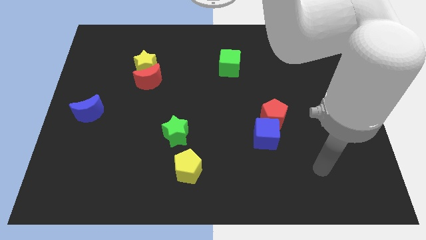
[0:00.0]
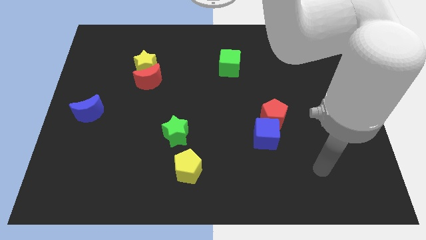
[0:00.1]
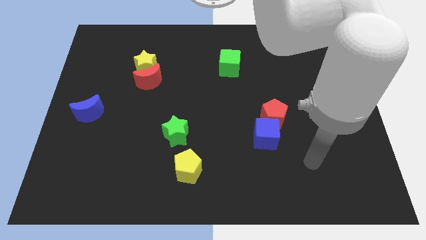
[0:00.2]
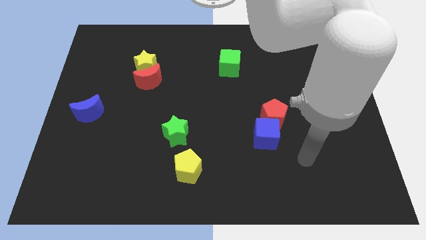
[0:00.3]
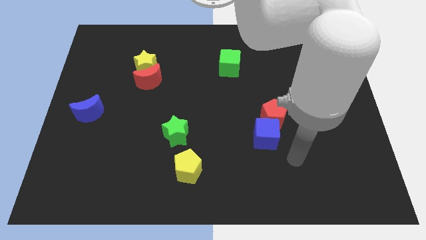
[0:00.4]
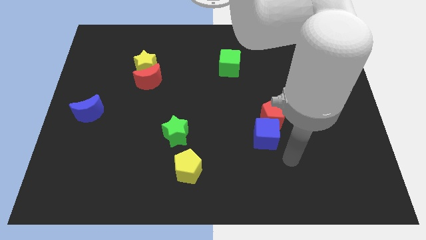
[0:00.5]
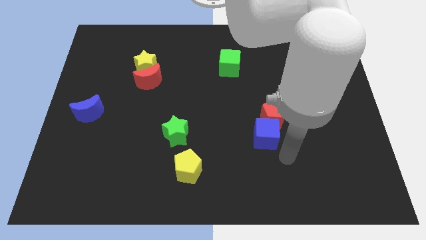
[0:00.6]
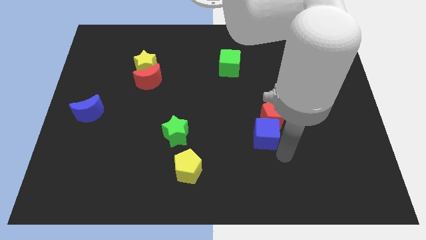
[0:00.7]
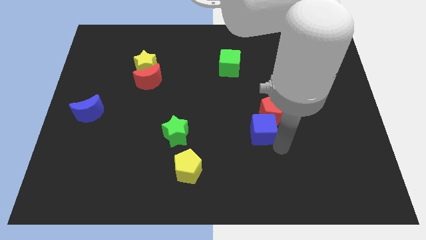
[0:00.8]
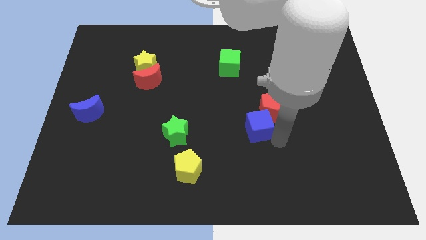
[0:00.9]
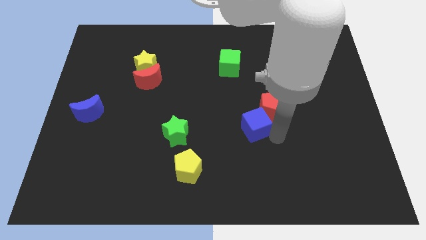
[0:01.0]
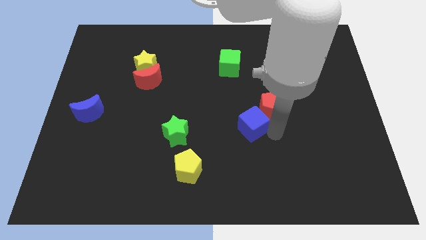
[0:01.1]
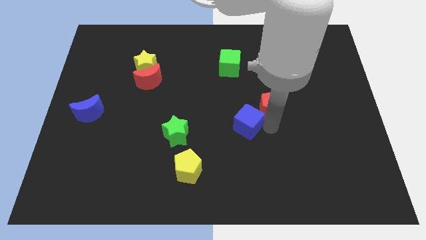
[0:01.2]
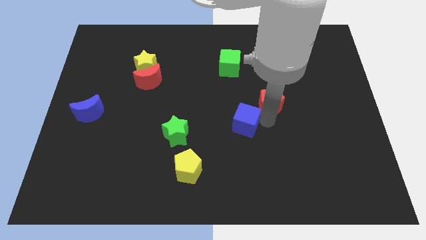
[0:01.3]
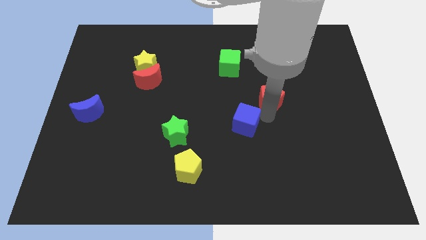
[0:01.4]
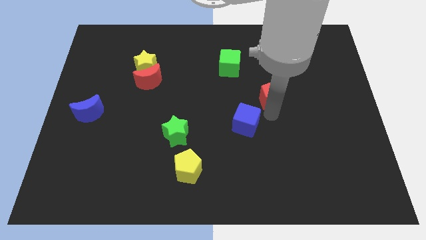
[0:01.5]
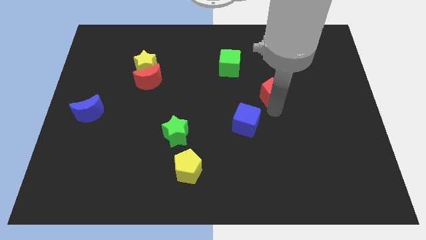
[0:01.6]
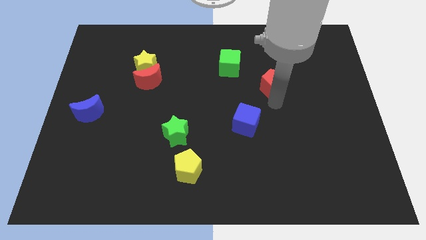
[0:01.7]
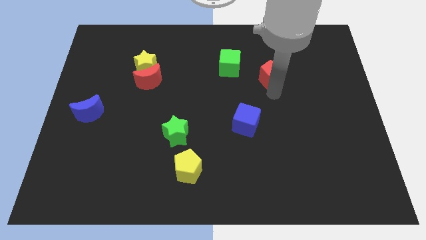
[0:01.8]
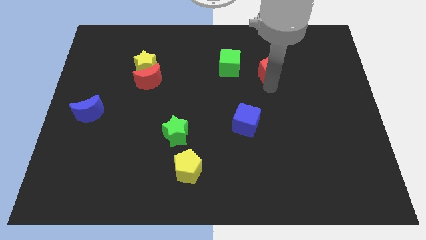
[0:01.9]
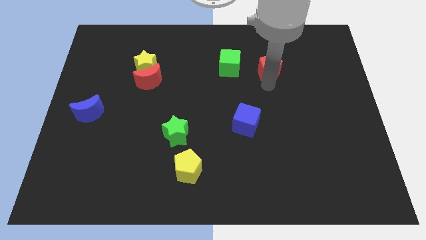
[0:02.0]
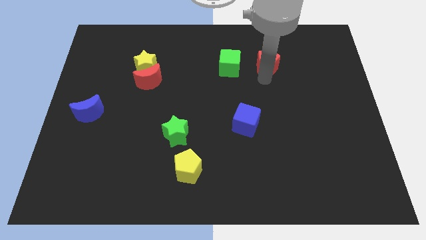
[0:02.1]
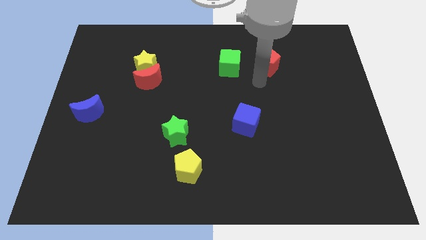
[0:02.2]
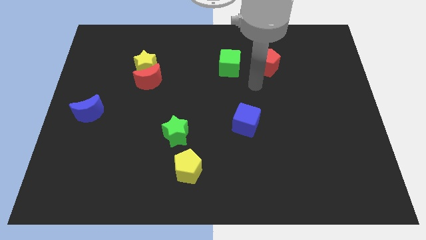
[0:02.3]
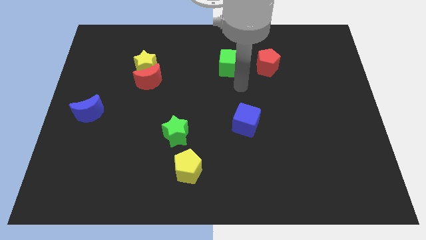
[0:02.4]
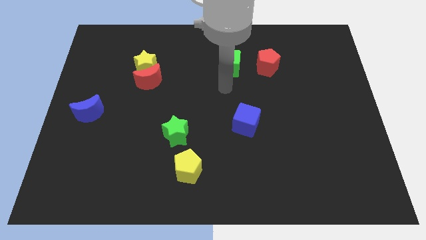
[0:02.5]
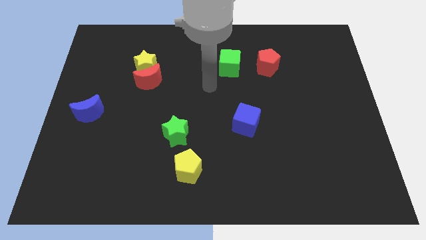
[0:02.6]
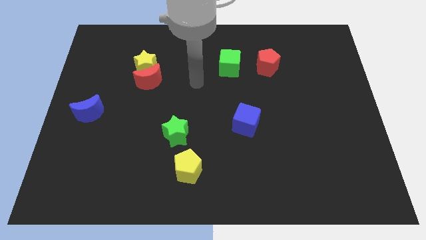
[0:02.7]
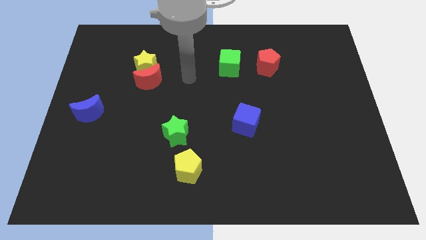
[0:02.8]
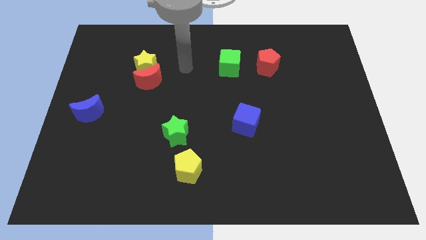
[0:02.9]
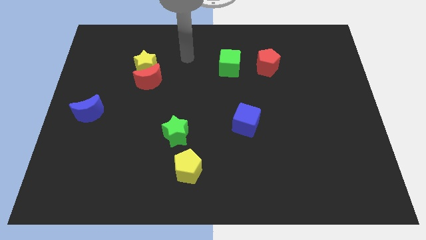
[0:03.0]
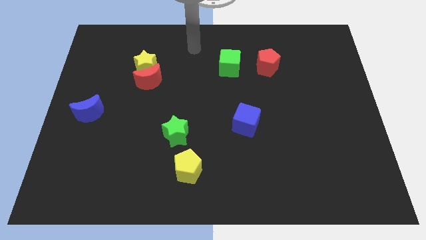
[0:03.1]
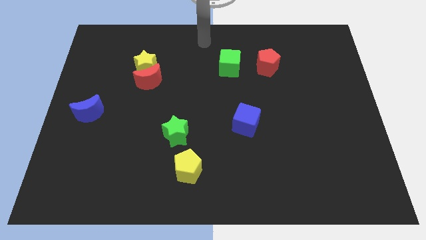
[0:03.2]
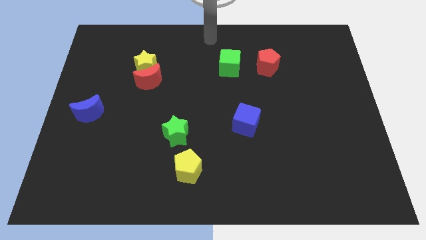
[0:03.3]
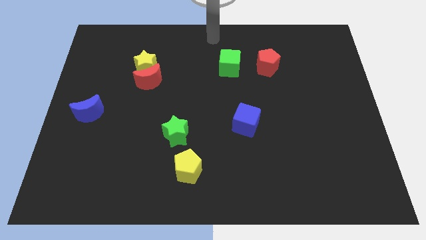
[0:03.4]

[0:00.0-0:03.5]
separate the blue cube and the red pentagon

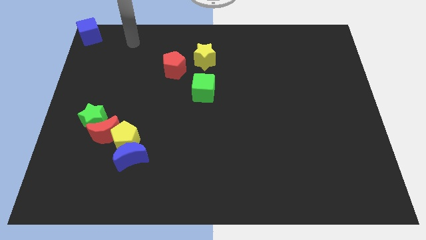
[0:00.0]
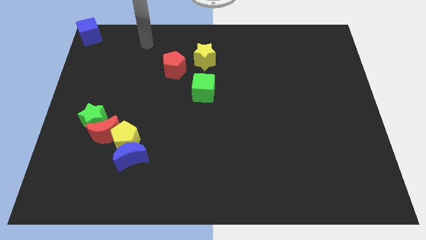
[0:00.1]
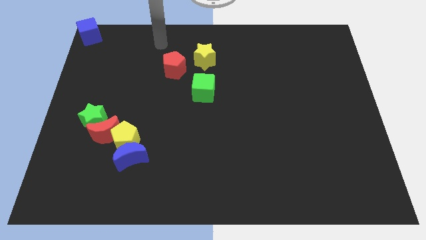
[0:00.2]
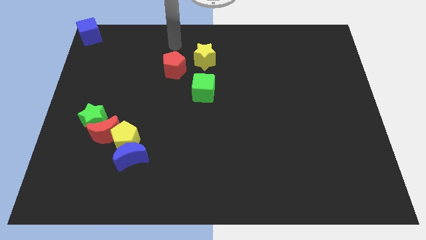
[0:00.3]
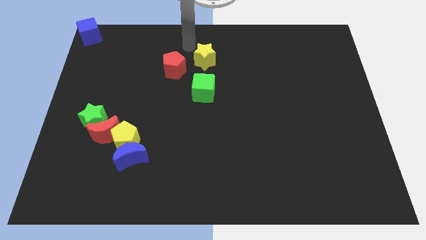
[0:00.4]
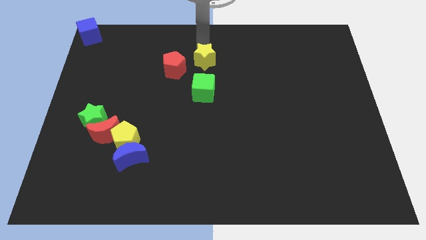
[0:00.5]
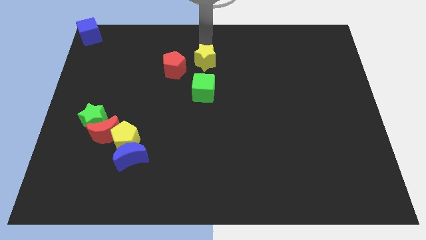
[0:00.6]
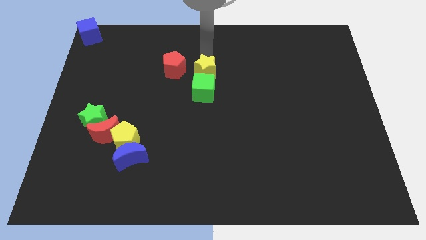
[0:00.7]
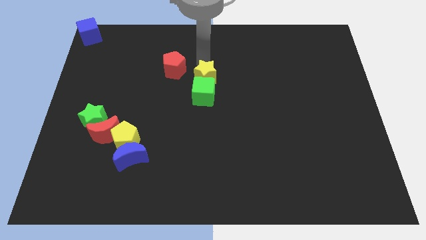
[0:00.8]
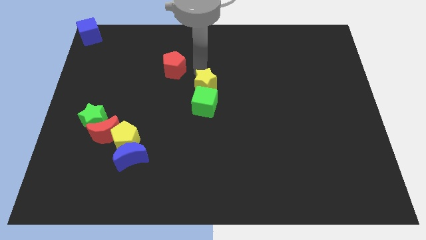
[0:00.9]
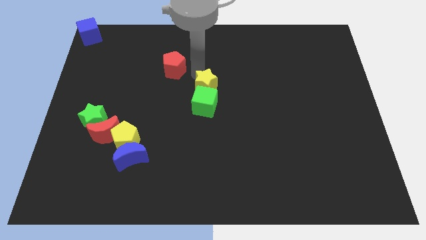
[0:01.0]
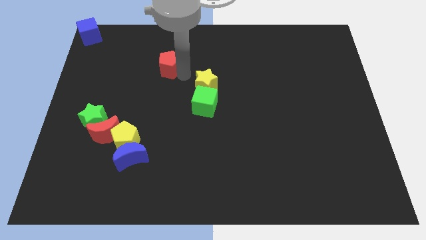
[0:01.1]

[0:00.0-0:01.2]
push the yellow star into the green cube

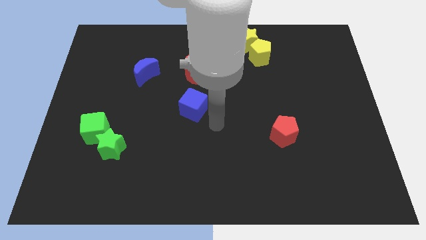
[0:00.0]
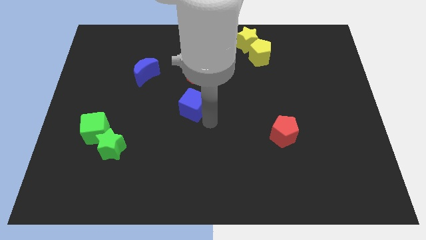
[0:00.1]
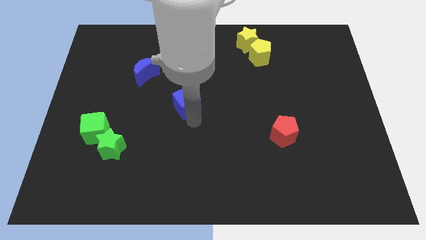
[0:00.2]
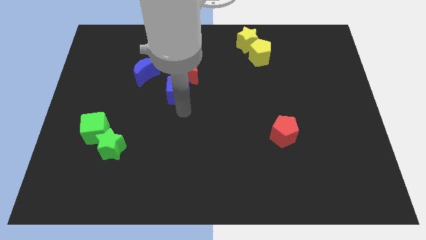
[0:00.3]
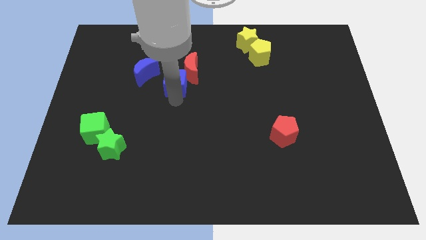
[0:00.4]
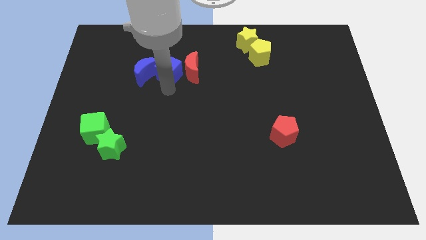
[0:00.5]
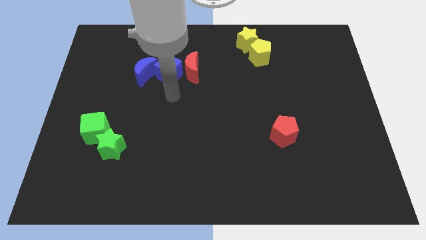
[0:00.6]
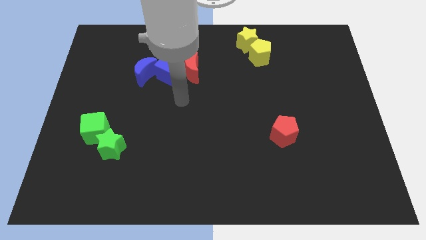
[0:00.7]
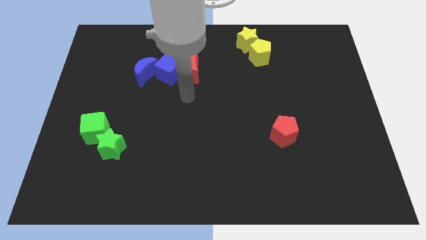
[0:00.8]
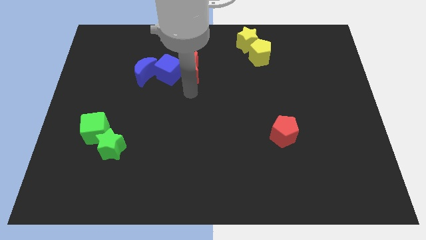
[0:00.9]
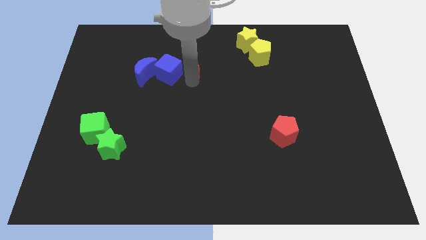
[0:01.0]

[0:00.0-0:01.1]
move the blue cube between the red crescent and red crescent

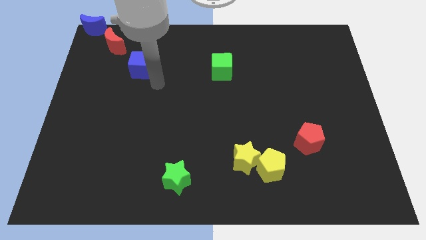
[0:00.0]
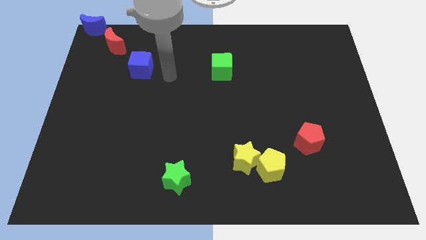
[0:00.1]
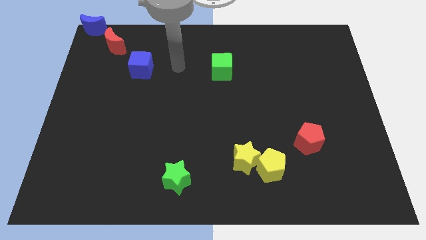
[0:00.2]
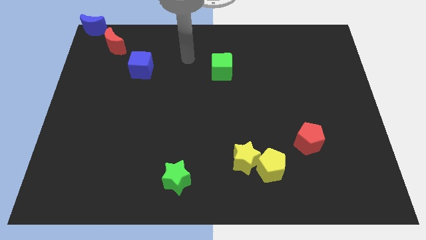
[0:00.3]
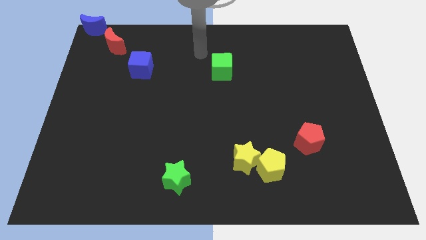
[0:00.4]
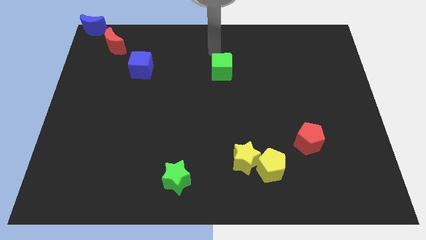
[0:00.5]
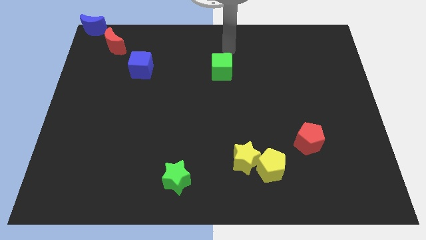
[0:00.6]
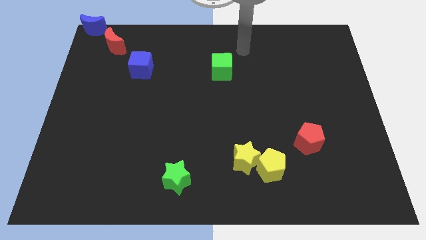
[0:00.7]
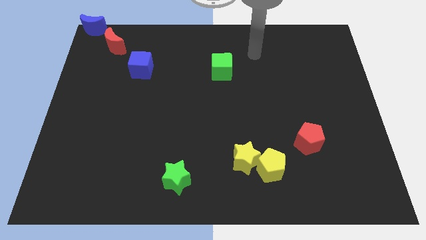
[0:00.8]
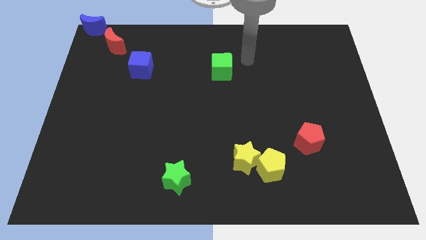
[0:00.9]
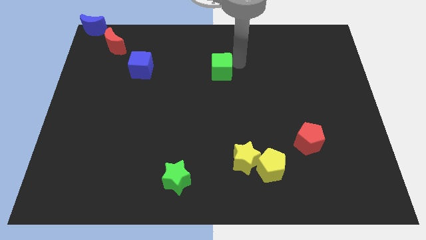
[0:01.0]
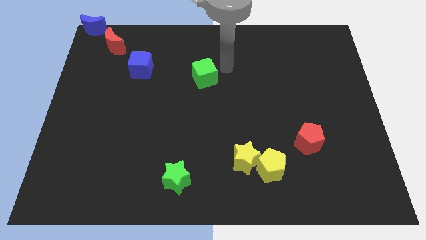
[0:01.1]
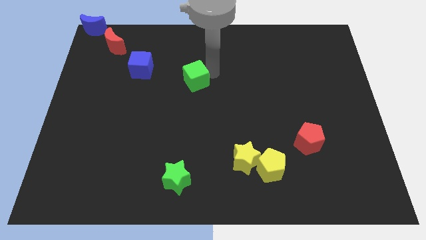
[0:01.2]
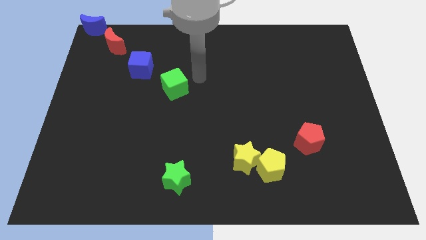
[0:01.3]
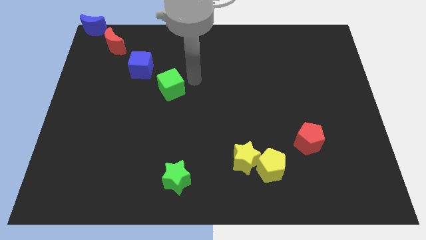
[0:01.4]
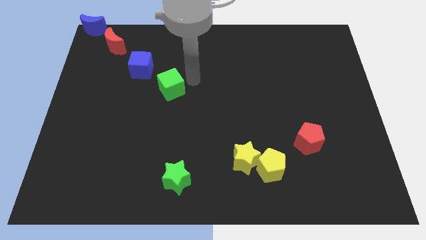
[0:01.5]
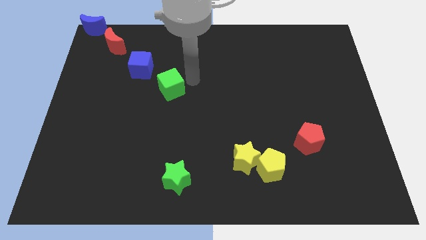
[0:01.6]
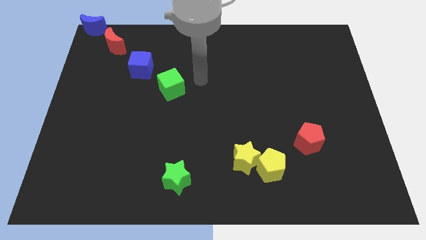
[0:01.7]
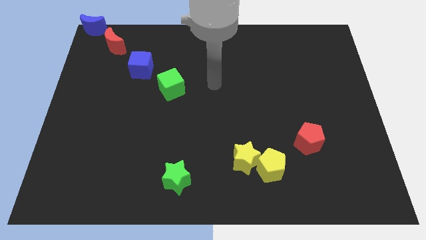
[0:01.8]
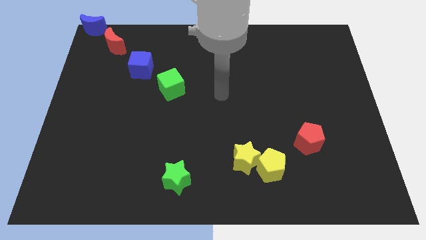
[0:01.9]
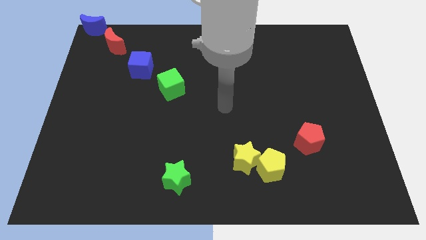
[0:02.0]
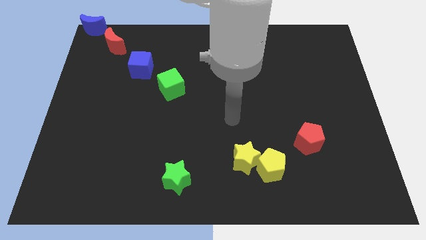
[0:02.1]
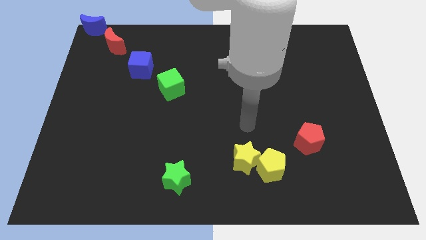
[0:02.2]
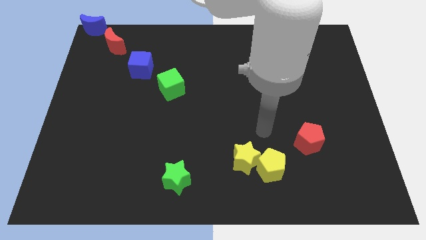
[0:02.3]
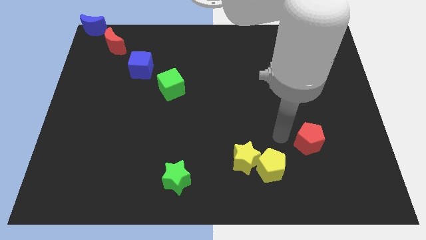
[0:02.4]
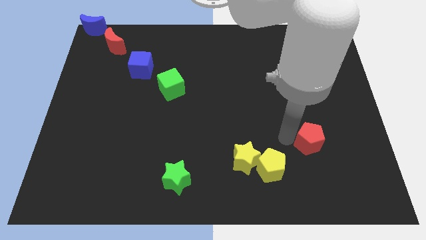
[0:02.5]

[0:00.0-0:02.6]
push the green cube diagonally to the bottom of the blue cube

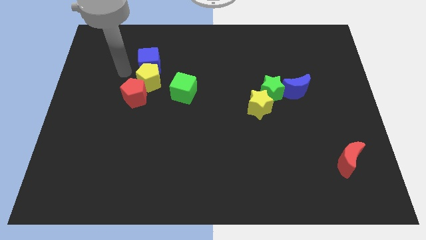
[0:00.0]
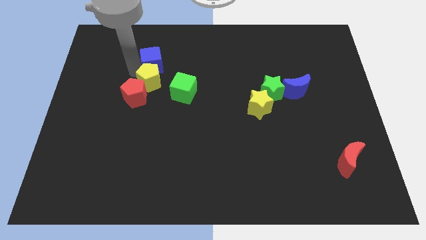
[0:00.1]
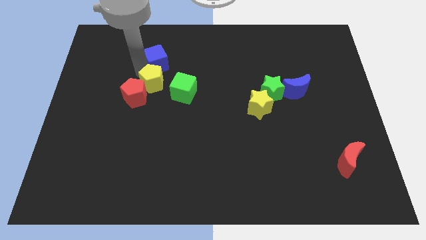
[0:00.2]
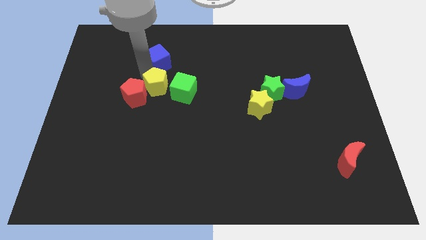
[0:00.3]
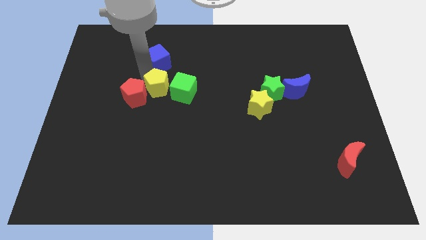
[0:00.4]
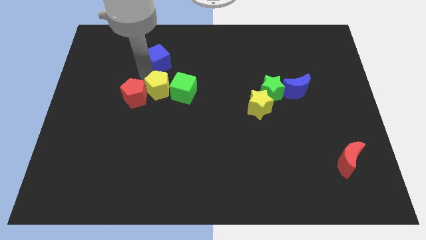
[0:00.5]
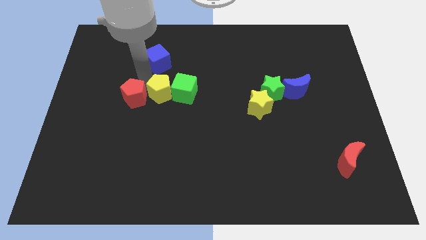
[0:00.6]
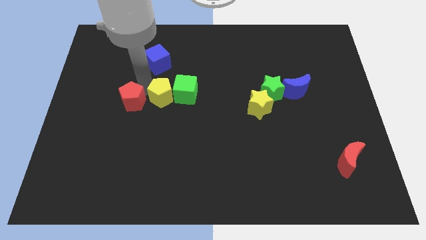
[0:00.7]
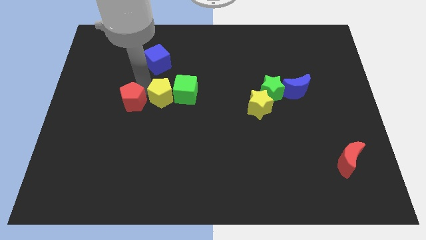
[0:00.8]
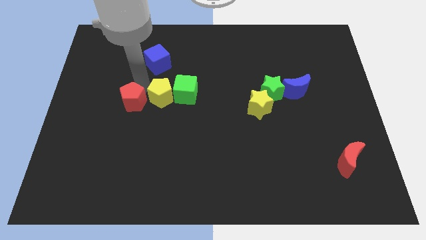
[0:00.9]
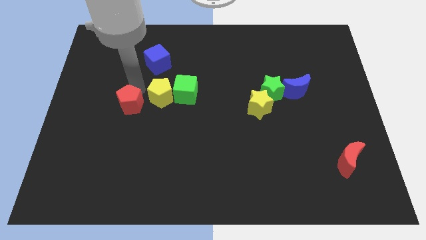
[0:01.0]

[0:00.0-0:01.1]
move the yellow pentagon between red pentagon and green cube
